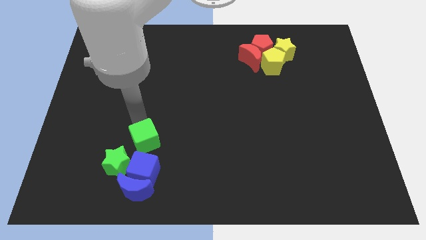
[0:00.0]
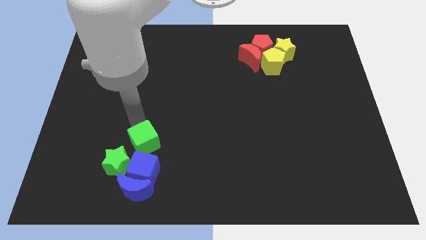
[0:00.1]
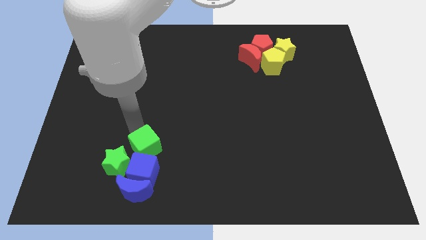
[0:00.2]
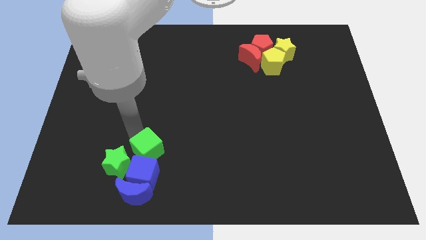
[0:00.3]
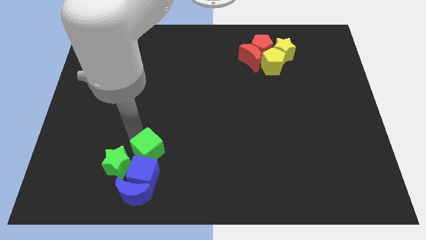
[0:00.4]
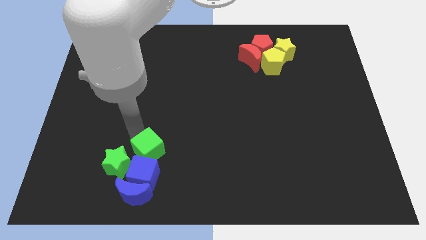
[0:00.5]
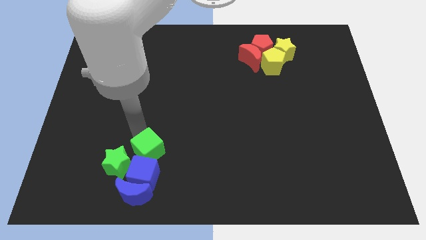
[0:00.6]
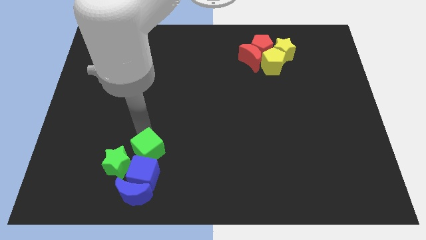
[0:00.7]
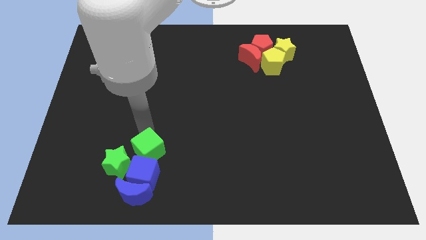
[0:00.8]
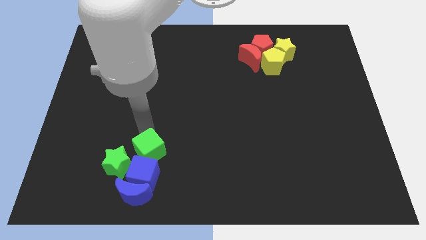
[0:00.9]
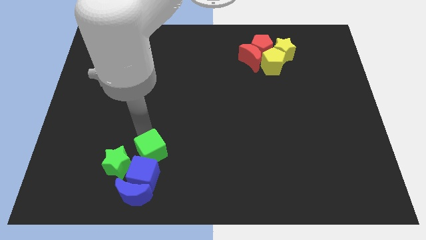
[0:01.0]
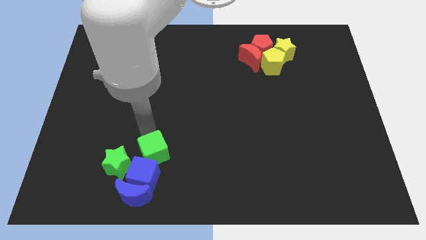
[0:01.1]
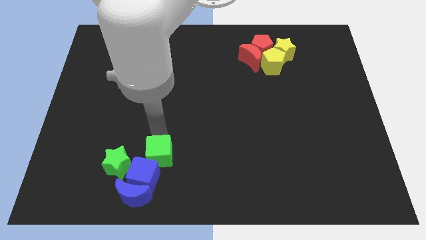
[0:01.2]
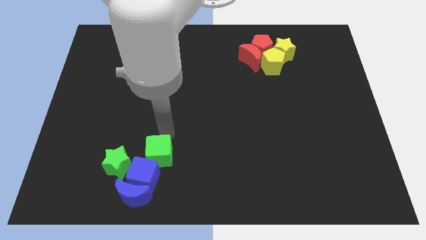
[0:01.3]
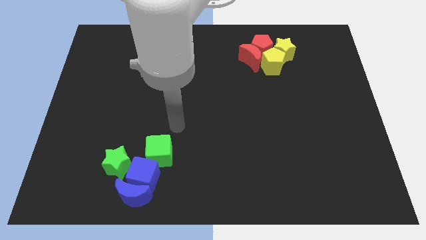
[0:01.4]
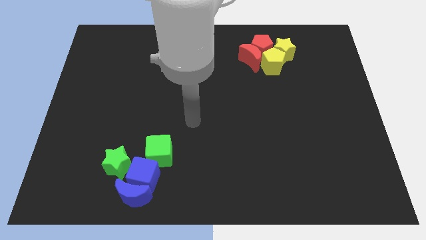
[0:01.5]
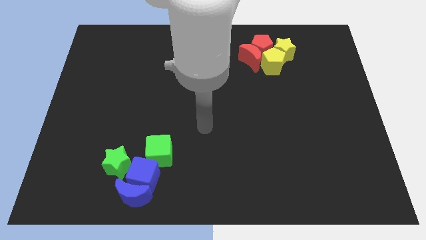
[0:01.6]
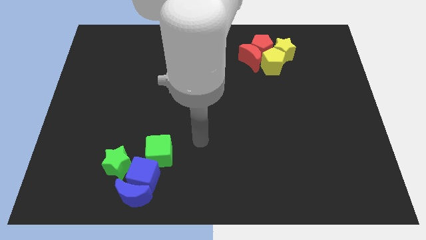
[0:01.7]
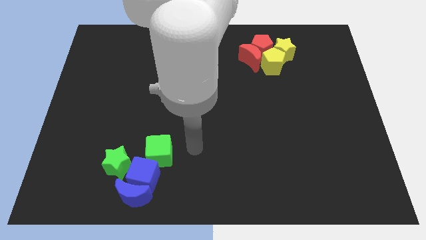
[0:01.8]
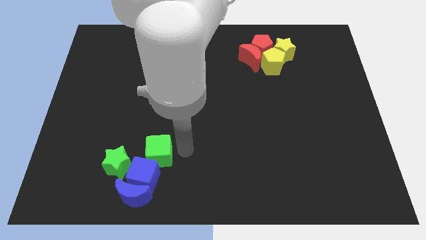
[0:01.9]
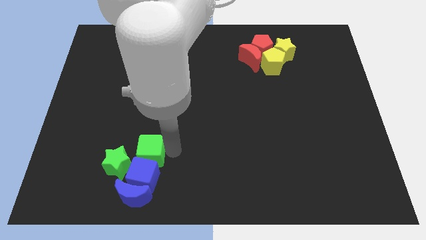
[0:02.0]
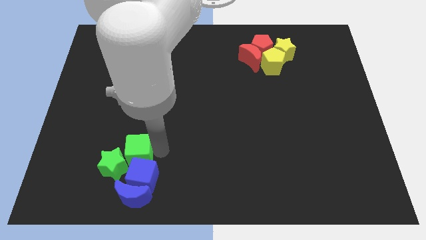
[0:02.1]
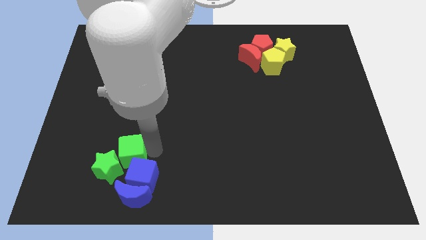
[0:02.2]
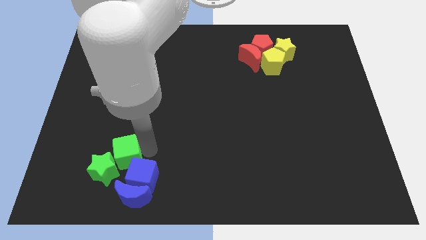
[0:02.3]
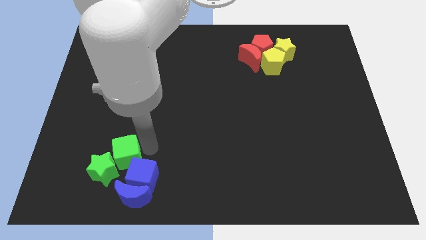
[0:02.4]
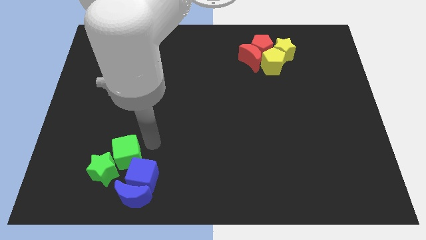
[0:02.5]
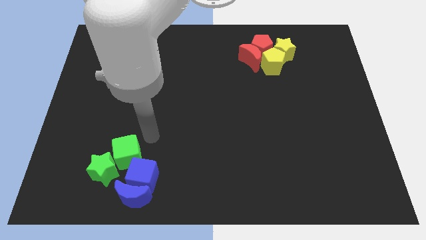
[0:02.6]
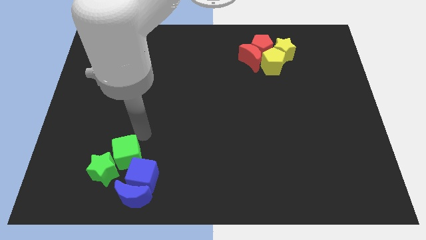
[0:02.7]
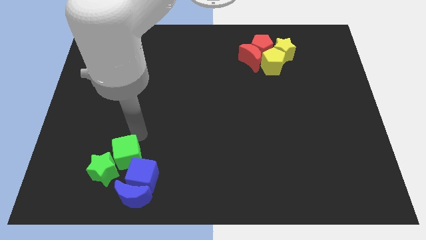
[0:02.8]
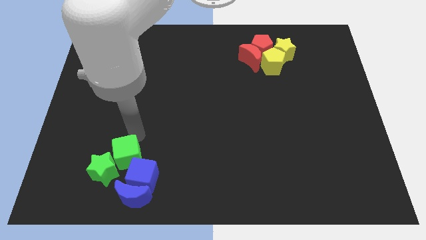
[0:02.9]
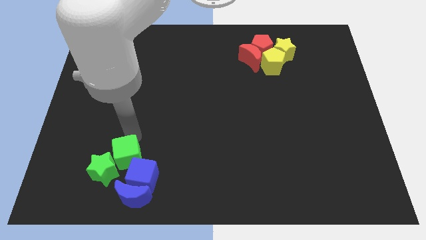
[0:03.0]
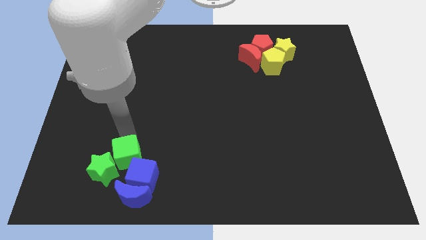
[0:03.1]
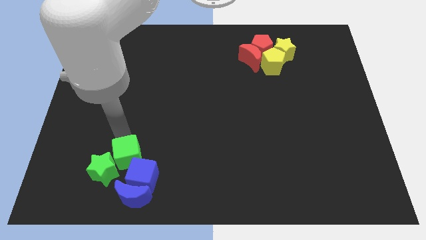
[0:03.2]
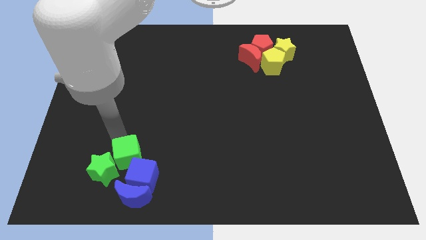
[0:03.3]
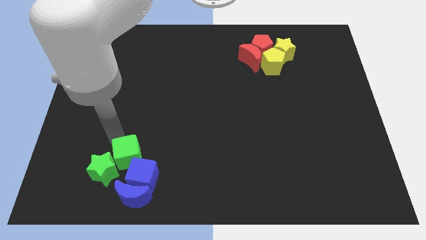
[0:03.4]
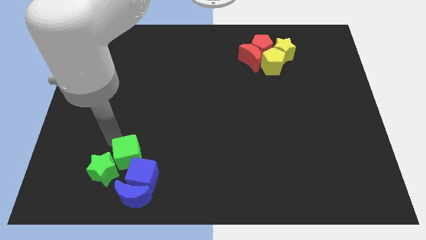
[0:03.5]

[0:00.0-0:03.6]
push the green cube into the green star

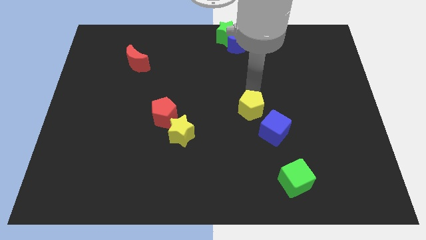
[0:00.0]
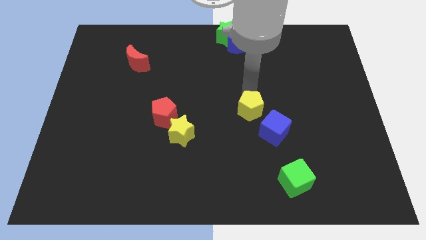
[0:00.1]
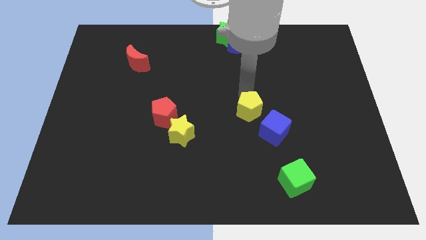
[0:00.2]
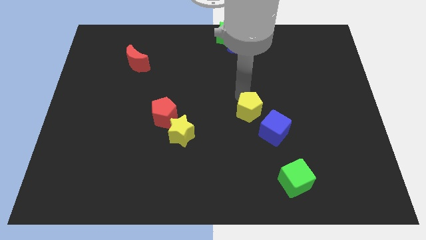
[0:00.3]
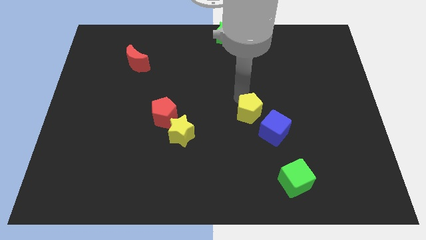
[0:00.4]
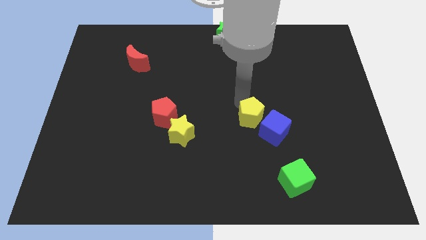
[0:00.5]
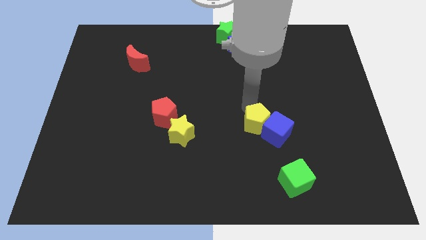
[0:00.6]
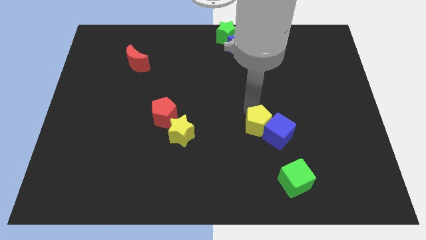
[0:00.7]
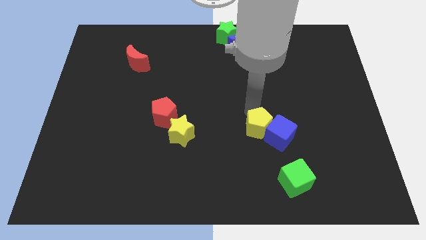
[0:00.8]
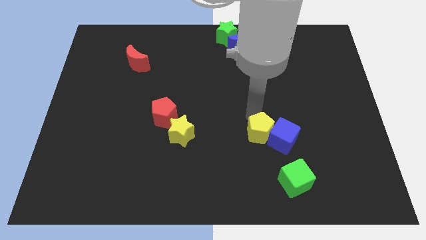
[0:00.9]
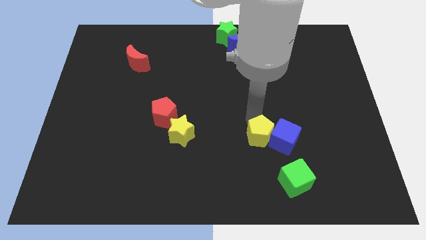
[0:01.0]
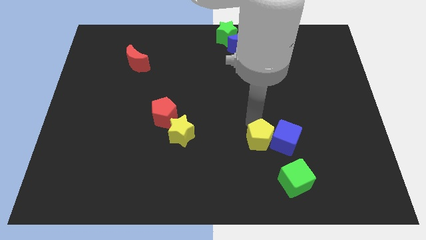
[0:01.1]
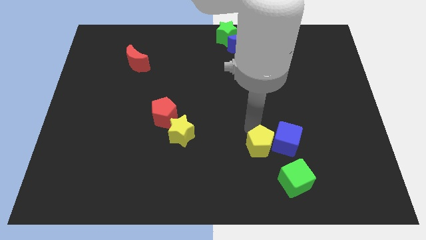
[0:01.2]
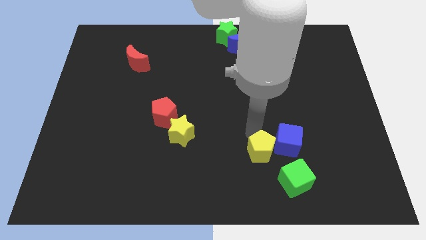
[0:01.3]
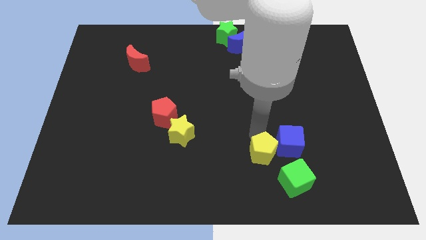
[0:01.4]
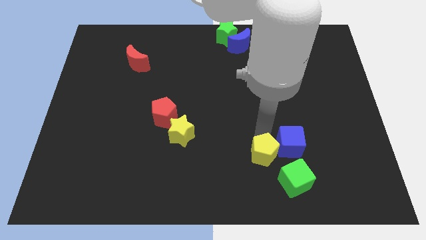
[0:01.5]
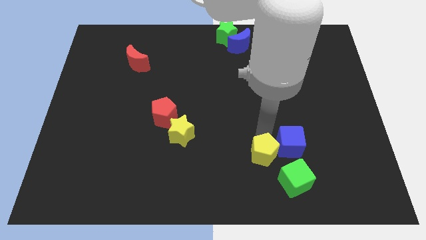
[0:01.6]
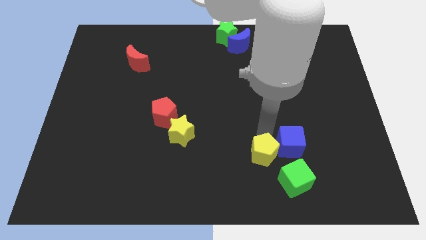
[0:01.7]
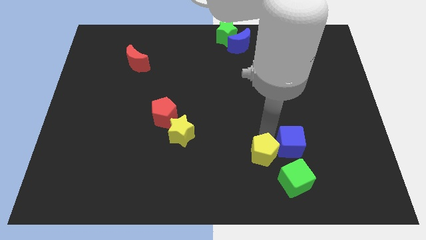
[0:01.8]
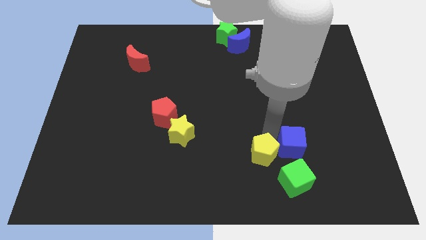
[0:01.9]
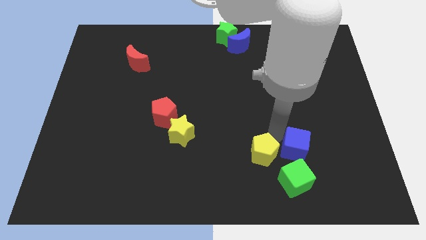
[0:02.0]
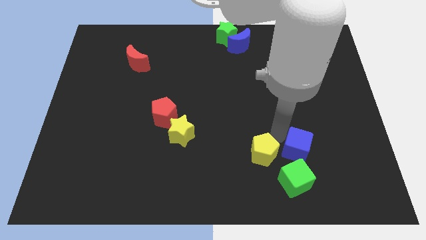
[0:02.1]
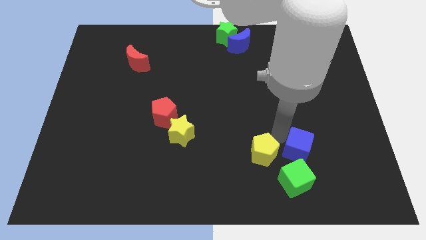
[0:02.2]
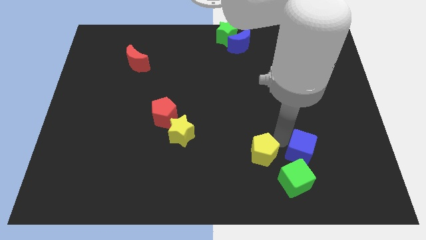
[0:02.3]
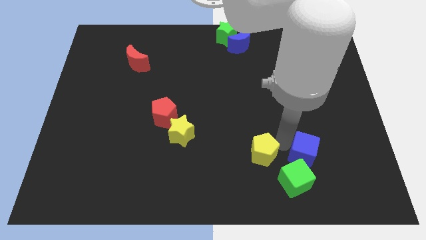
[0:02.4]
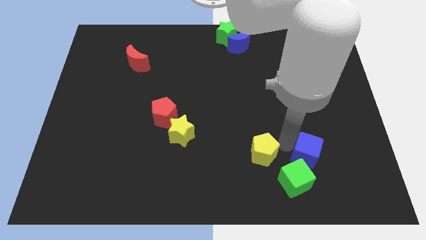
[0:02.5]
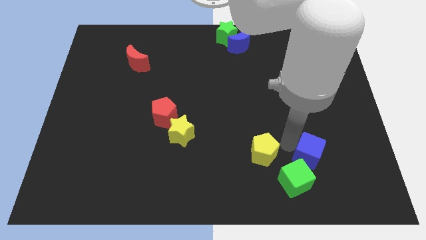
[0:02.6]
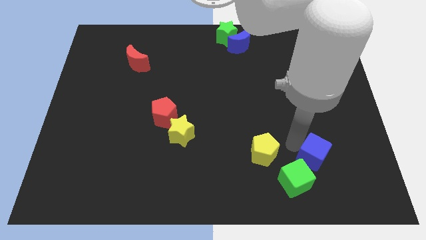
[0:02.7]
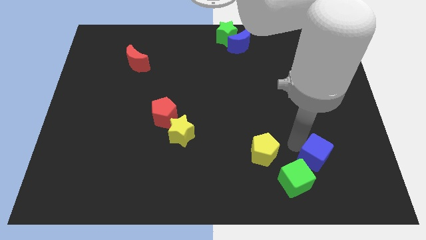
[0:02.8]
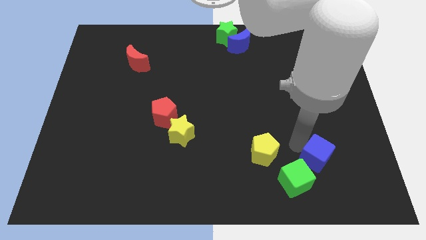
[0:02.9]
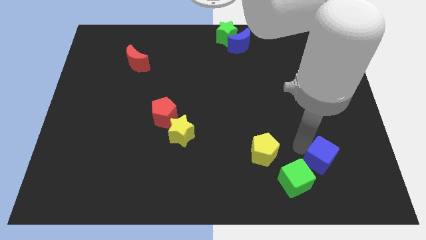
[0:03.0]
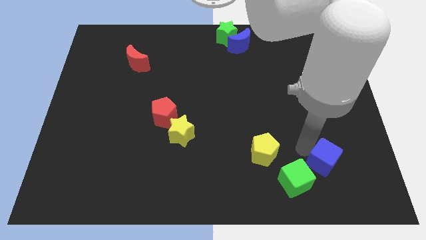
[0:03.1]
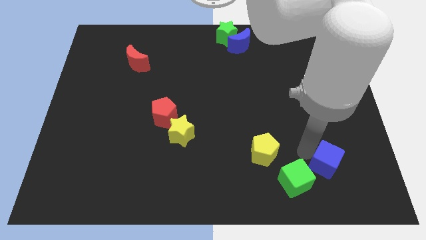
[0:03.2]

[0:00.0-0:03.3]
push the yellow pentagon and blue cube towards the green cube

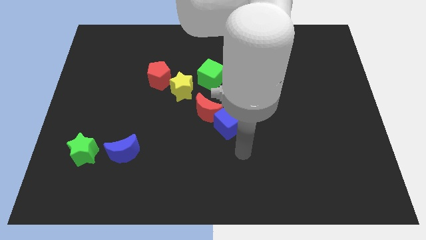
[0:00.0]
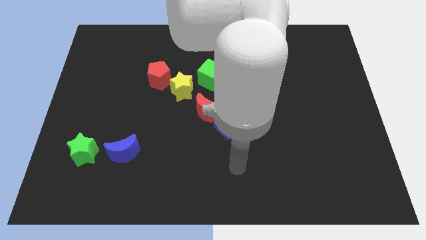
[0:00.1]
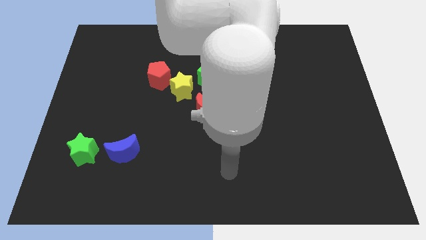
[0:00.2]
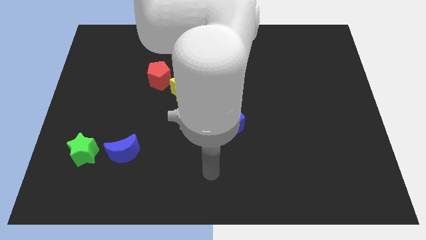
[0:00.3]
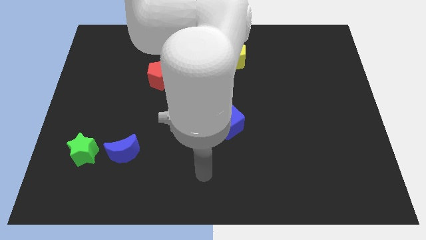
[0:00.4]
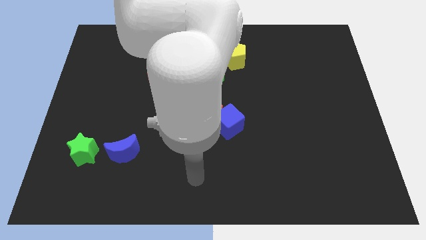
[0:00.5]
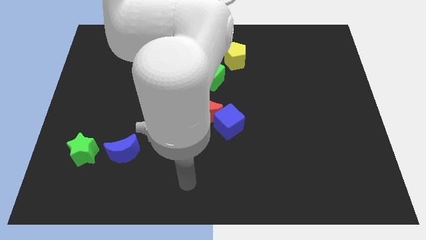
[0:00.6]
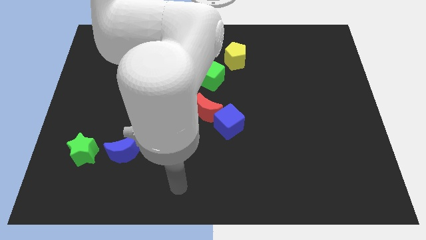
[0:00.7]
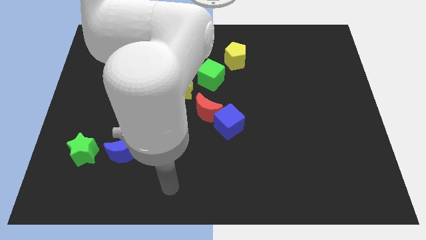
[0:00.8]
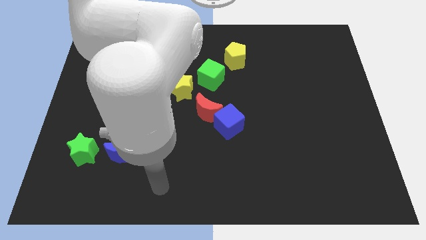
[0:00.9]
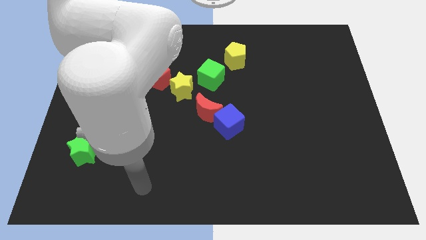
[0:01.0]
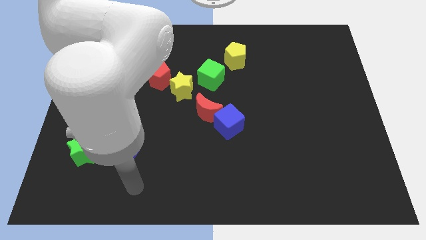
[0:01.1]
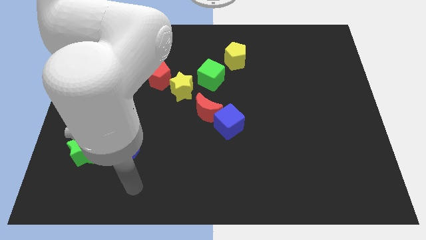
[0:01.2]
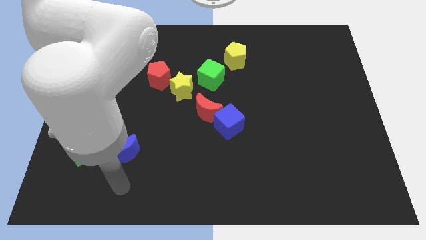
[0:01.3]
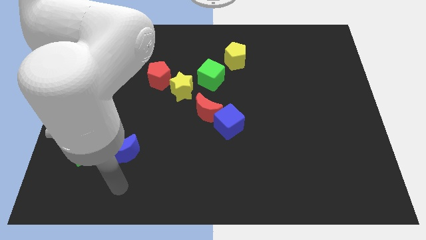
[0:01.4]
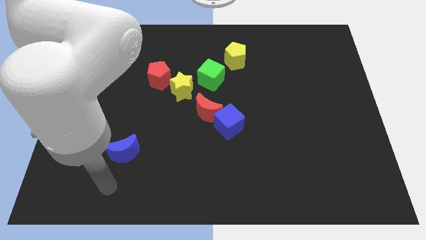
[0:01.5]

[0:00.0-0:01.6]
move your arm towards left of the board

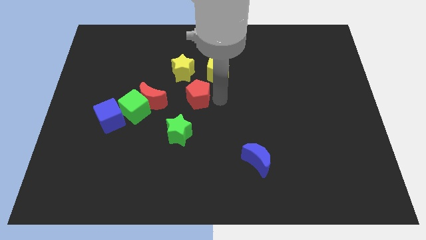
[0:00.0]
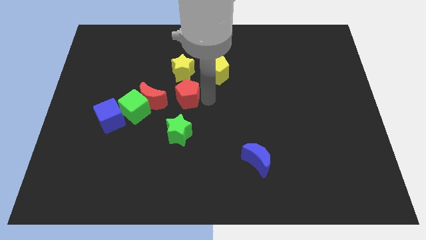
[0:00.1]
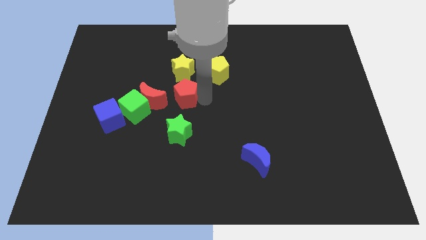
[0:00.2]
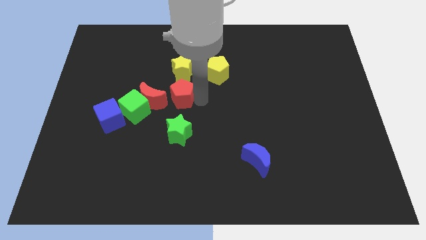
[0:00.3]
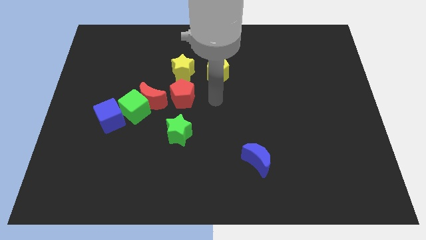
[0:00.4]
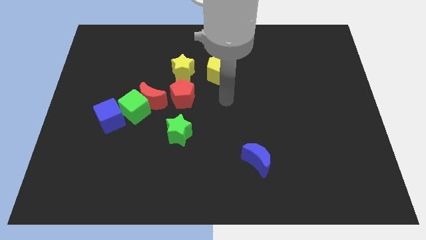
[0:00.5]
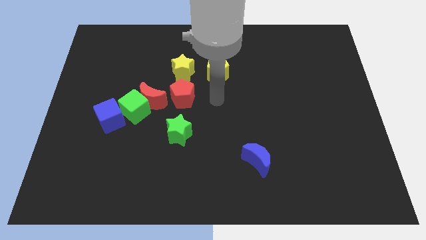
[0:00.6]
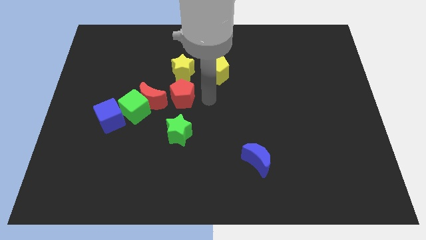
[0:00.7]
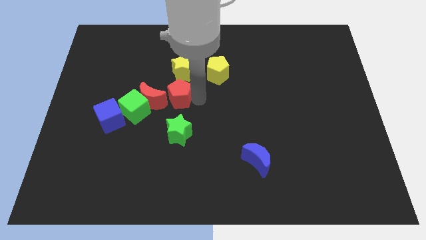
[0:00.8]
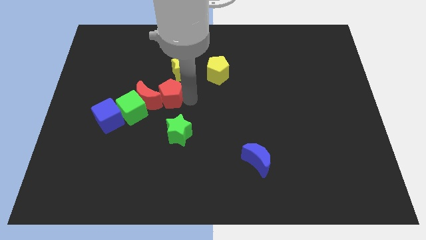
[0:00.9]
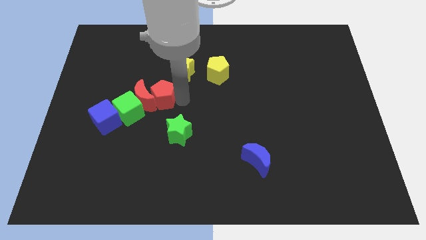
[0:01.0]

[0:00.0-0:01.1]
push the red pentagon into the red crescent
